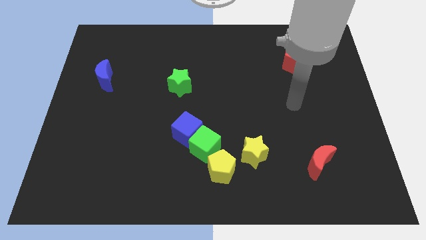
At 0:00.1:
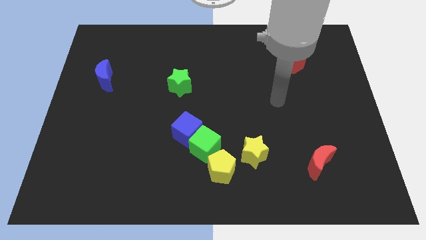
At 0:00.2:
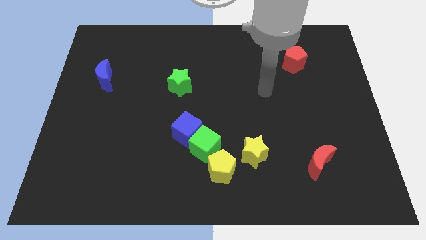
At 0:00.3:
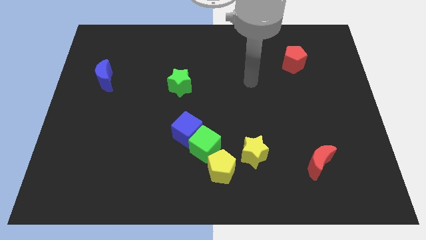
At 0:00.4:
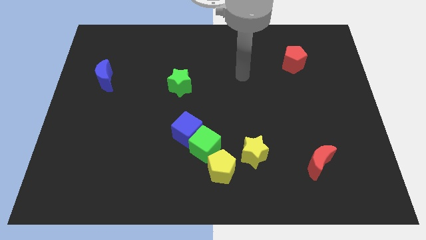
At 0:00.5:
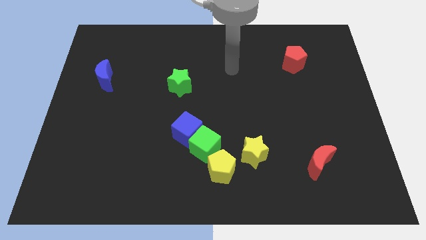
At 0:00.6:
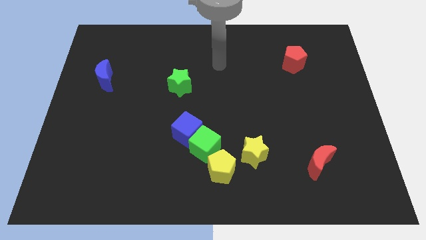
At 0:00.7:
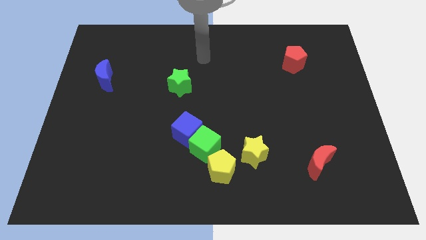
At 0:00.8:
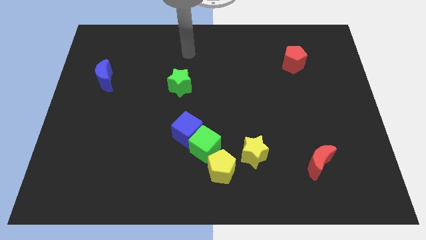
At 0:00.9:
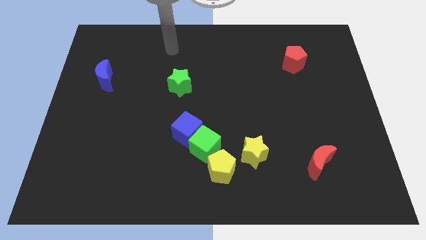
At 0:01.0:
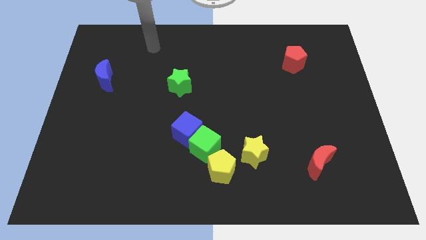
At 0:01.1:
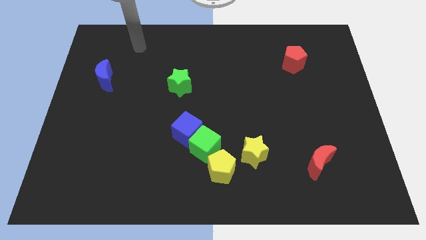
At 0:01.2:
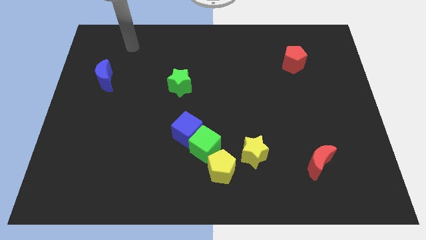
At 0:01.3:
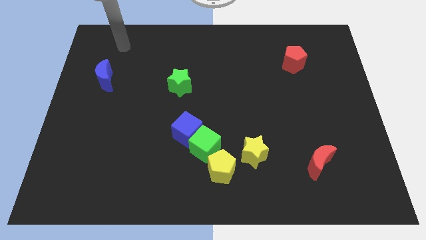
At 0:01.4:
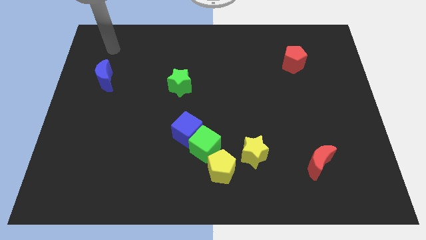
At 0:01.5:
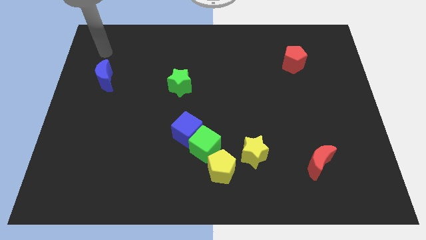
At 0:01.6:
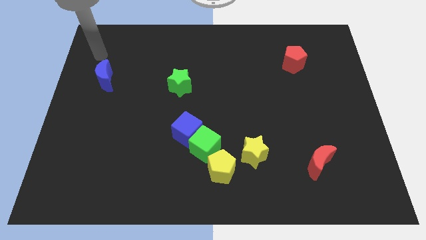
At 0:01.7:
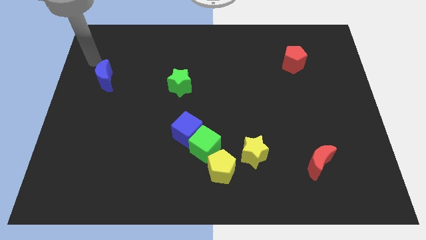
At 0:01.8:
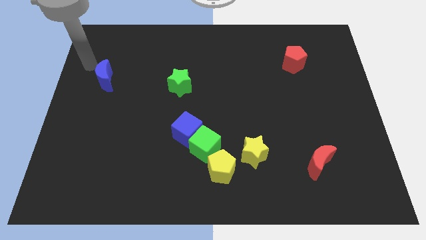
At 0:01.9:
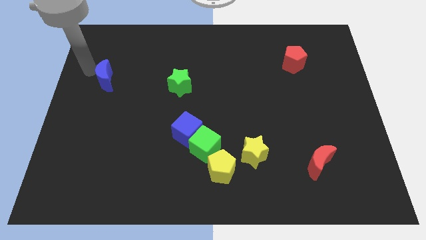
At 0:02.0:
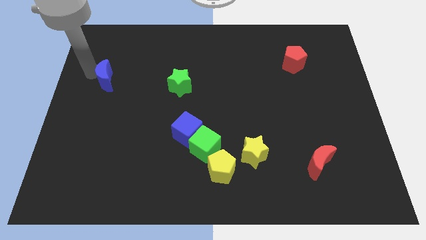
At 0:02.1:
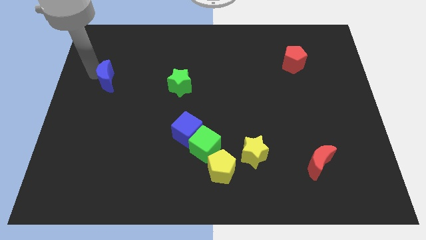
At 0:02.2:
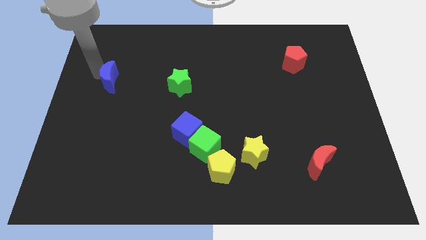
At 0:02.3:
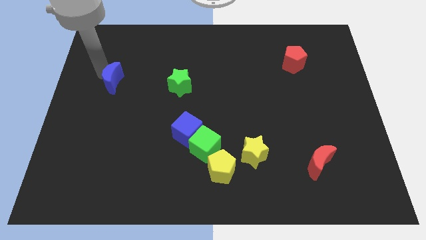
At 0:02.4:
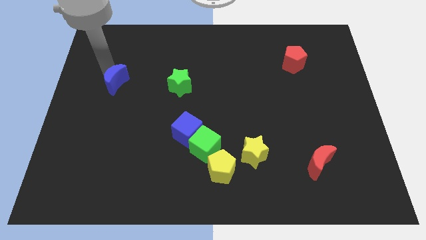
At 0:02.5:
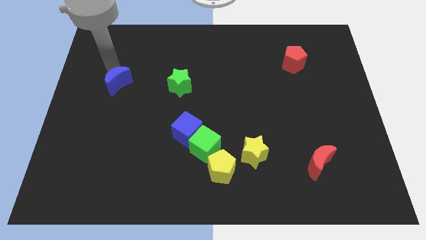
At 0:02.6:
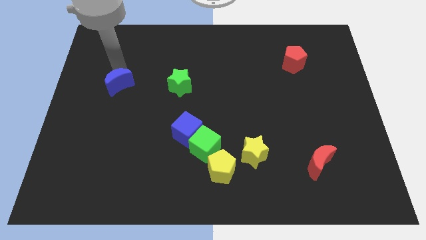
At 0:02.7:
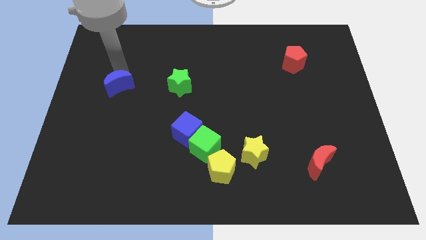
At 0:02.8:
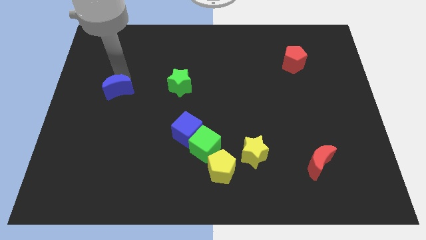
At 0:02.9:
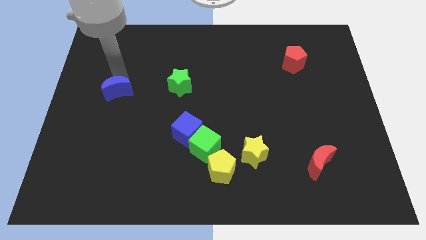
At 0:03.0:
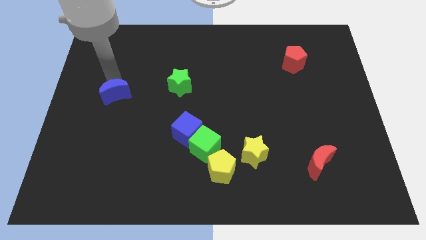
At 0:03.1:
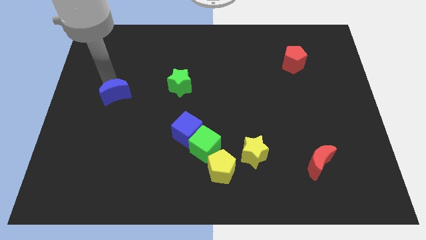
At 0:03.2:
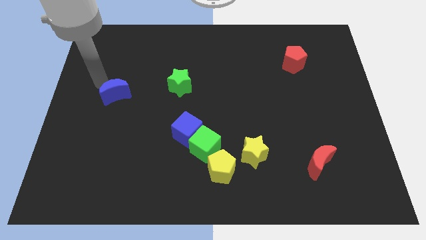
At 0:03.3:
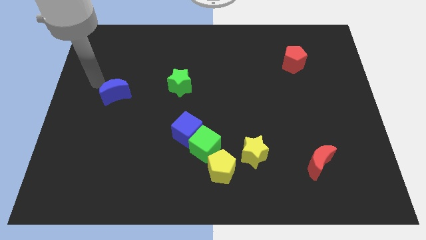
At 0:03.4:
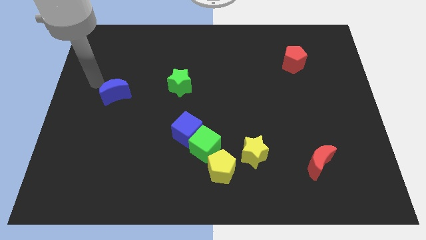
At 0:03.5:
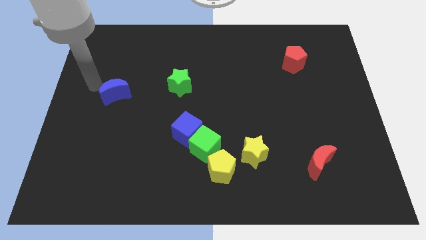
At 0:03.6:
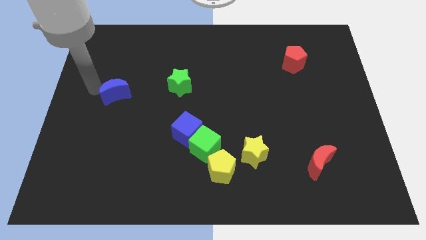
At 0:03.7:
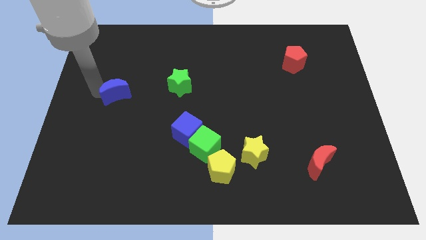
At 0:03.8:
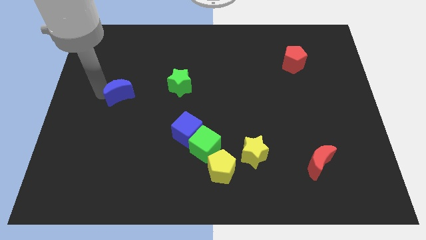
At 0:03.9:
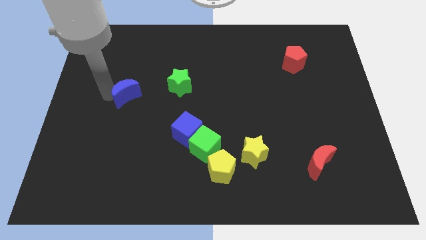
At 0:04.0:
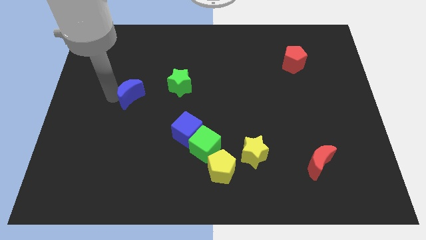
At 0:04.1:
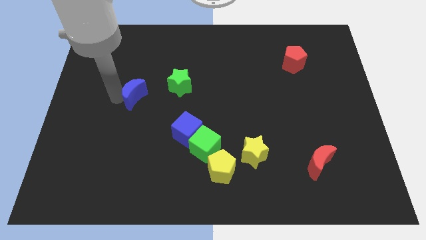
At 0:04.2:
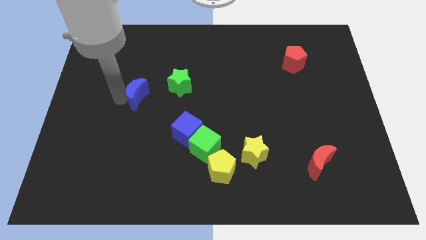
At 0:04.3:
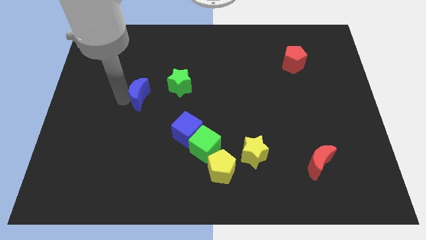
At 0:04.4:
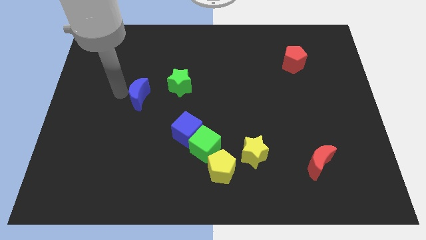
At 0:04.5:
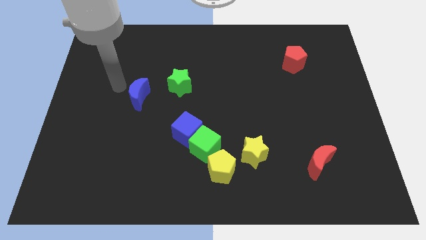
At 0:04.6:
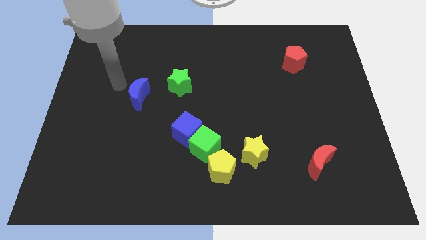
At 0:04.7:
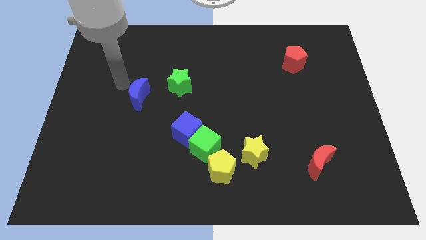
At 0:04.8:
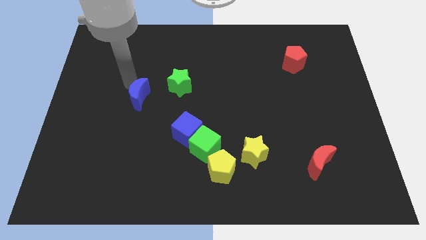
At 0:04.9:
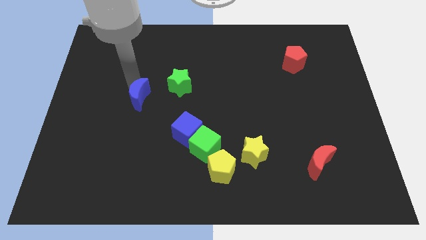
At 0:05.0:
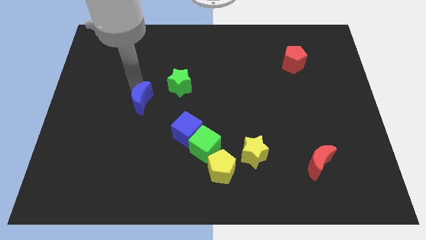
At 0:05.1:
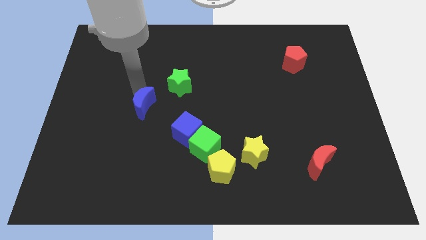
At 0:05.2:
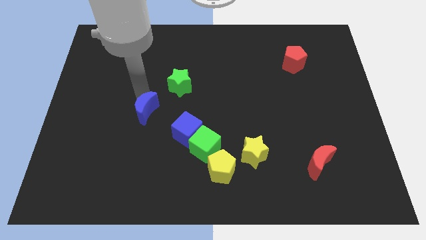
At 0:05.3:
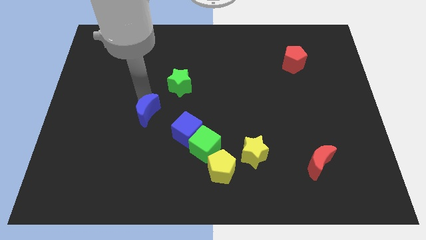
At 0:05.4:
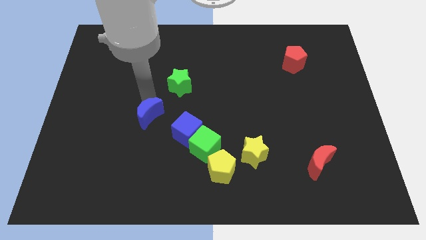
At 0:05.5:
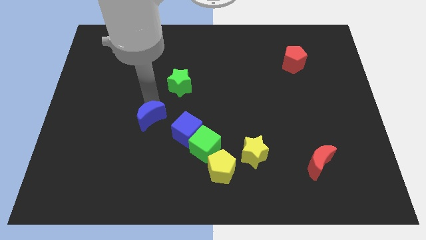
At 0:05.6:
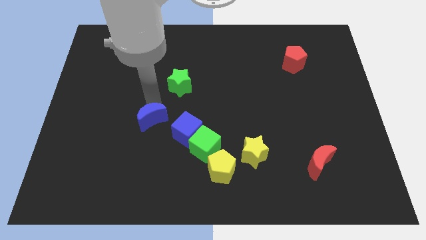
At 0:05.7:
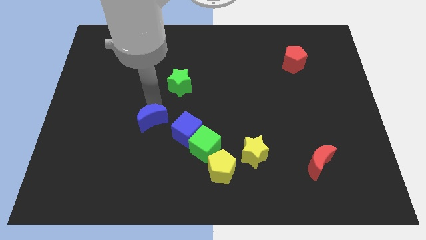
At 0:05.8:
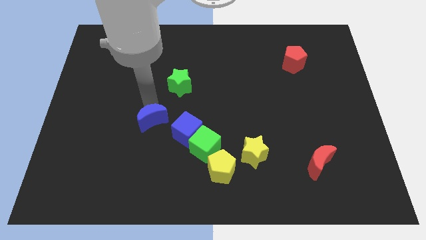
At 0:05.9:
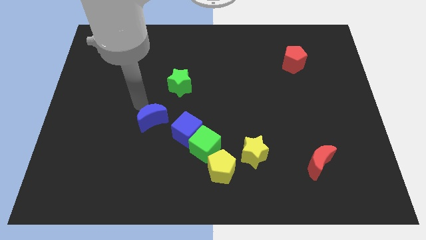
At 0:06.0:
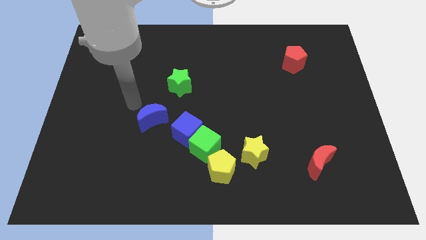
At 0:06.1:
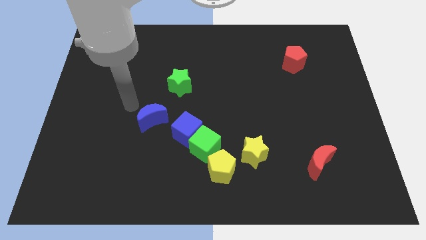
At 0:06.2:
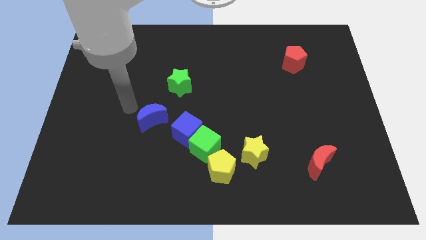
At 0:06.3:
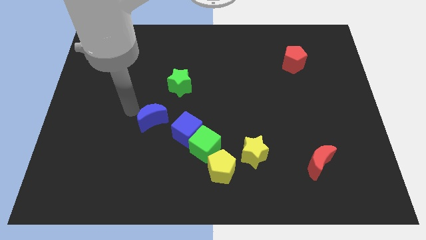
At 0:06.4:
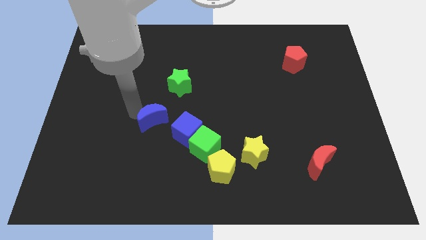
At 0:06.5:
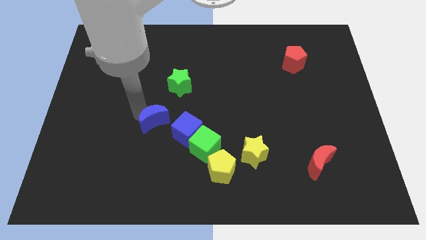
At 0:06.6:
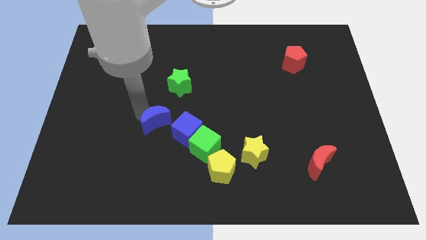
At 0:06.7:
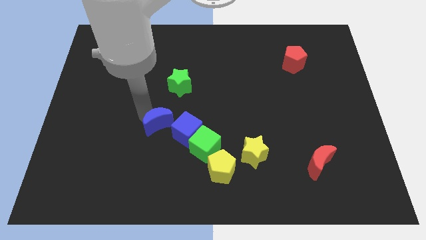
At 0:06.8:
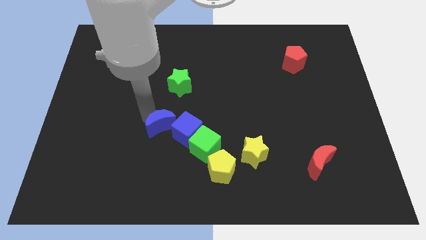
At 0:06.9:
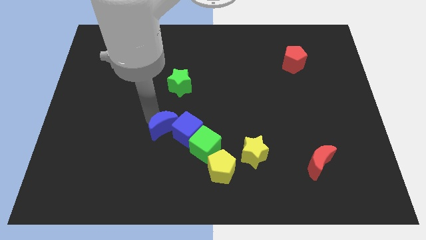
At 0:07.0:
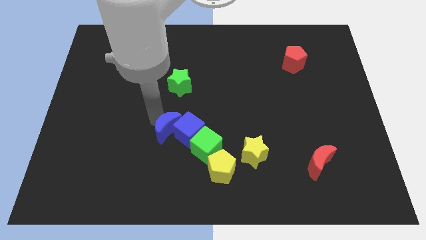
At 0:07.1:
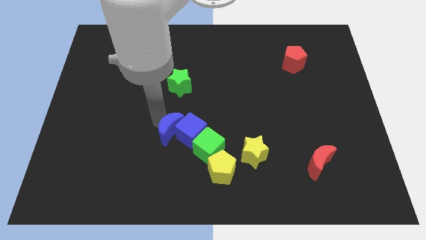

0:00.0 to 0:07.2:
move the blue moon next to the blue cube

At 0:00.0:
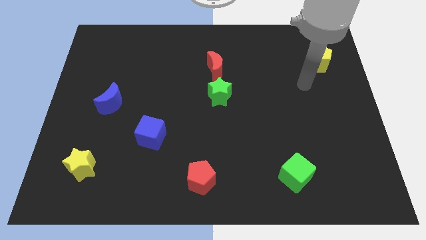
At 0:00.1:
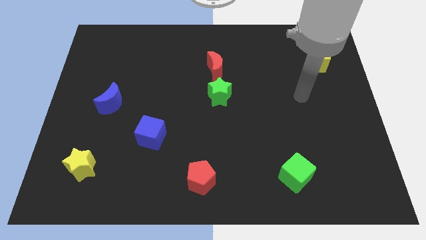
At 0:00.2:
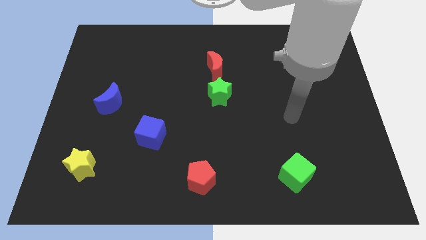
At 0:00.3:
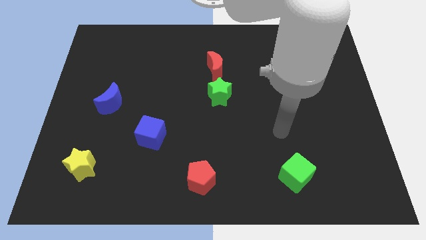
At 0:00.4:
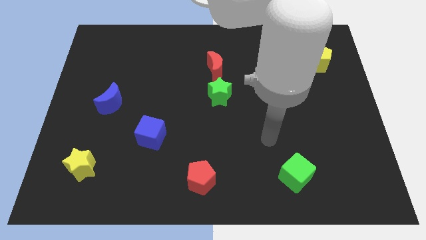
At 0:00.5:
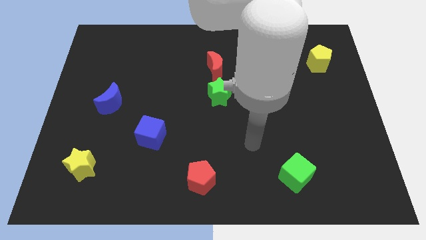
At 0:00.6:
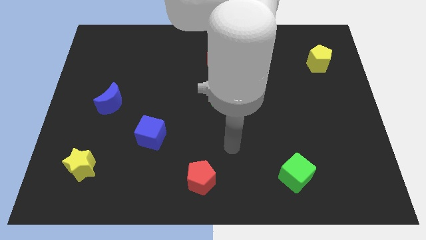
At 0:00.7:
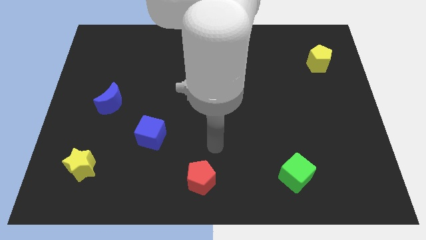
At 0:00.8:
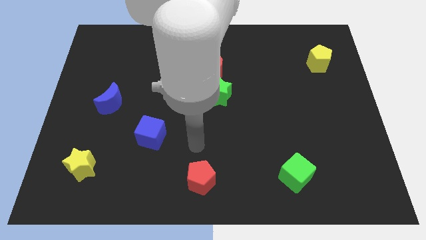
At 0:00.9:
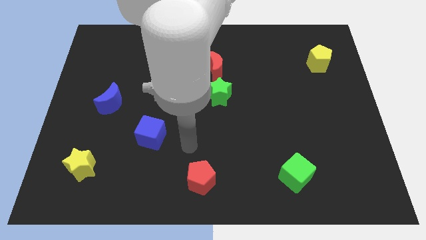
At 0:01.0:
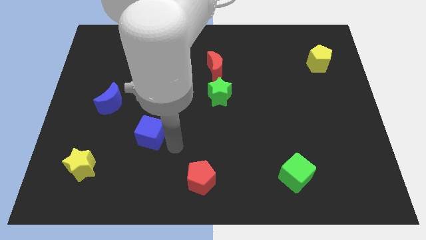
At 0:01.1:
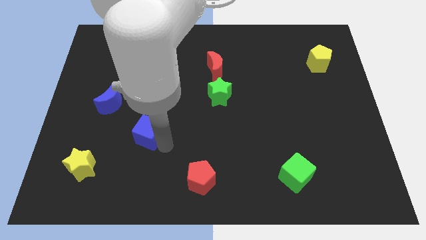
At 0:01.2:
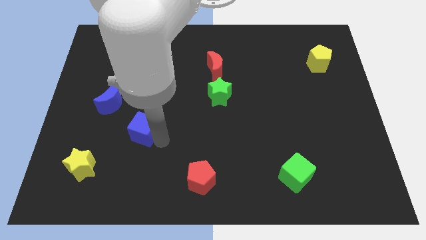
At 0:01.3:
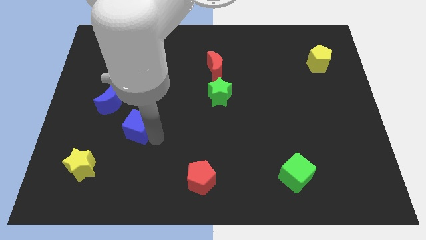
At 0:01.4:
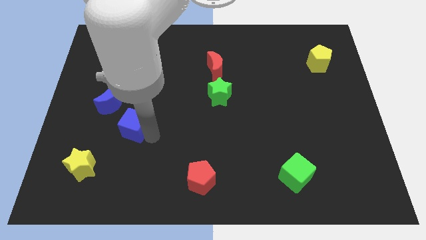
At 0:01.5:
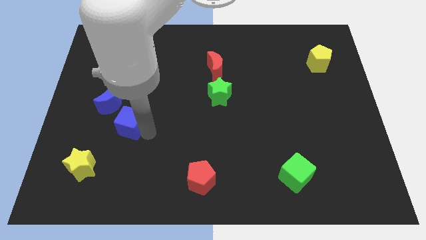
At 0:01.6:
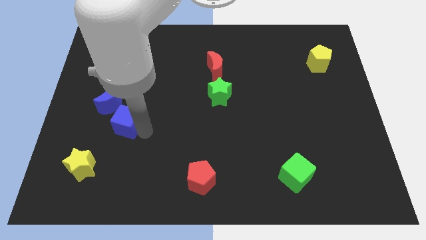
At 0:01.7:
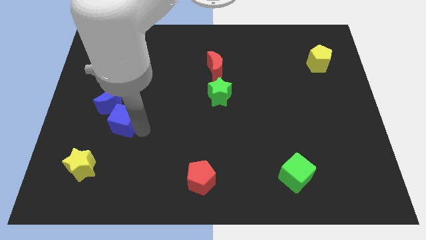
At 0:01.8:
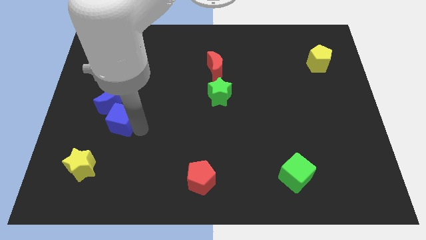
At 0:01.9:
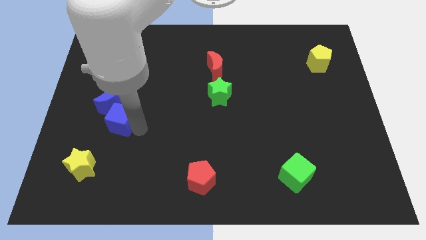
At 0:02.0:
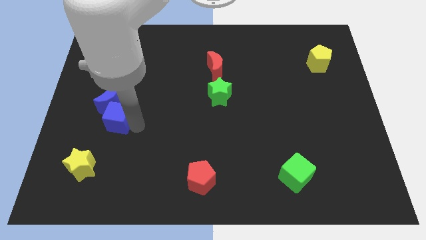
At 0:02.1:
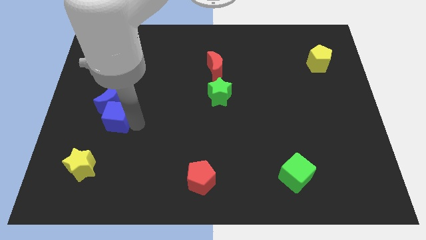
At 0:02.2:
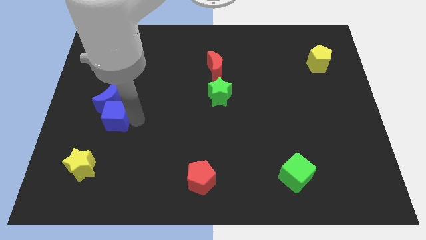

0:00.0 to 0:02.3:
push the blue cube next to the blue moon
